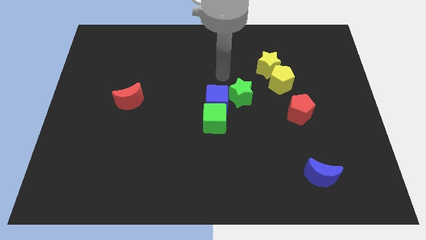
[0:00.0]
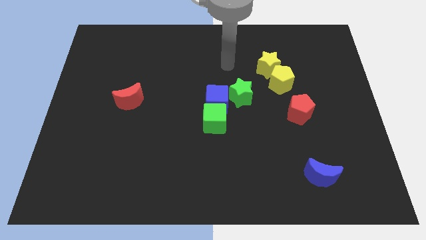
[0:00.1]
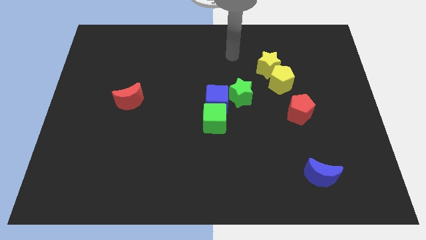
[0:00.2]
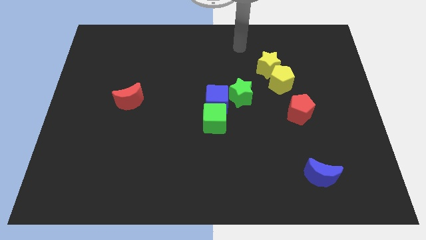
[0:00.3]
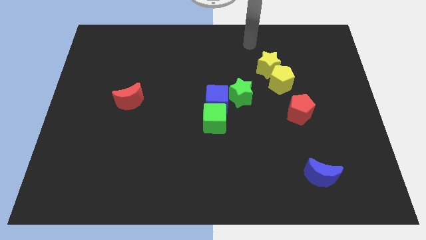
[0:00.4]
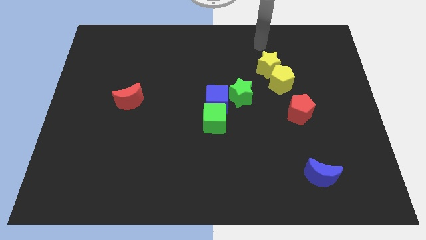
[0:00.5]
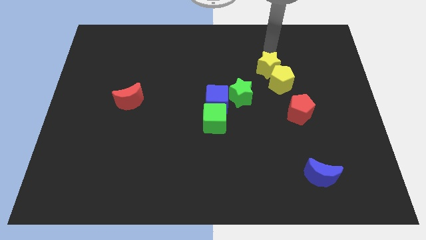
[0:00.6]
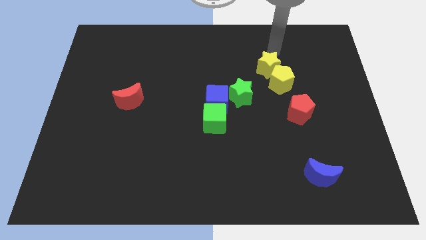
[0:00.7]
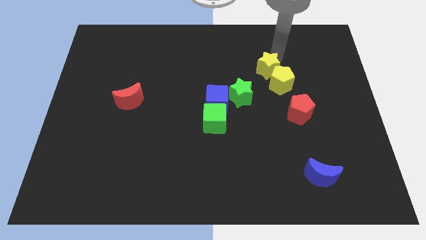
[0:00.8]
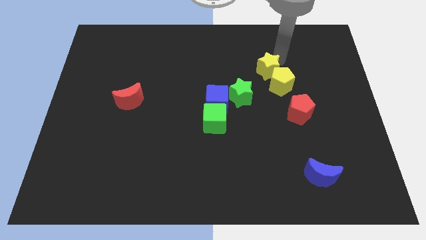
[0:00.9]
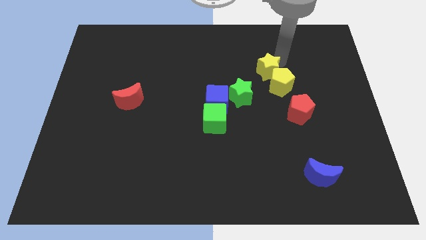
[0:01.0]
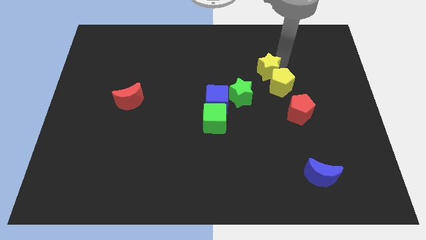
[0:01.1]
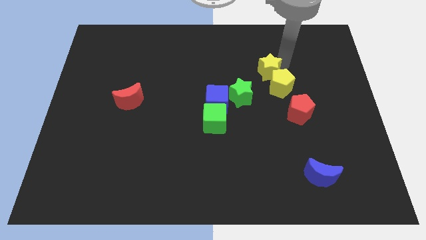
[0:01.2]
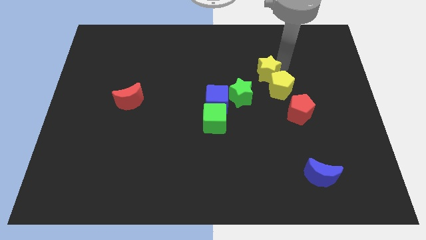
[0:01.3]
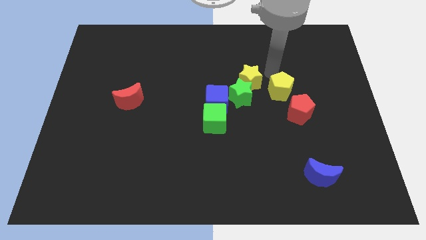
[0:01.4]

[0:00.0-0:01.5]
separate the yellow star and yellow pentagon

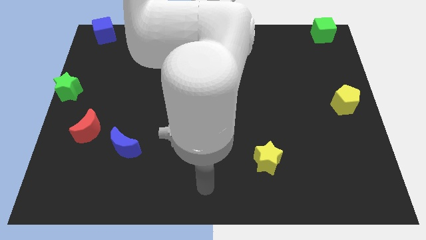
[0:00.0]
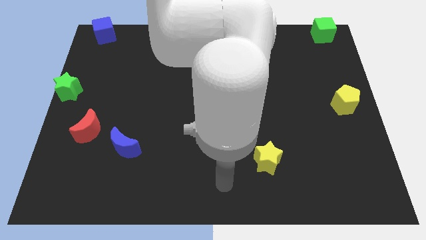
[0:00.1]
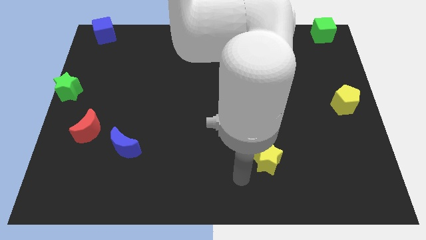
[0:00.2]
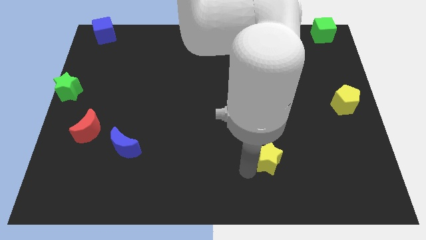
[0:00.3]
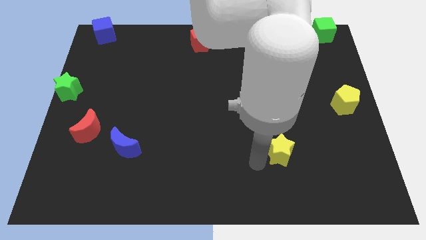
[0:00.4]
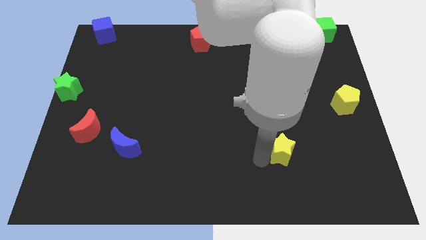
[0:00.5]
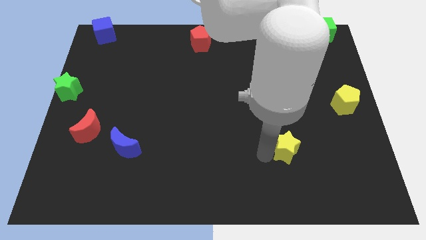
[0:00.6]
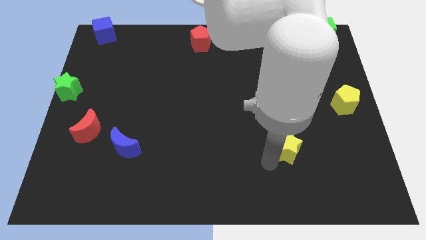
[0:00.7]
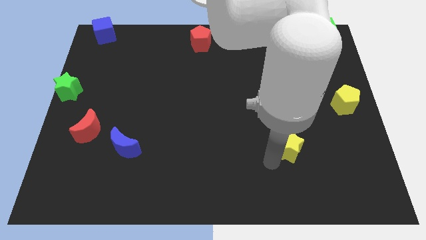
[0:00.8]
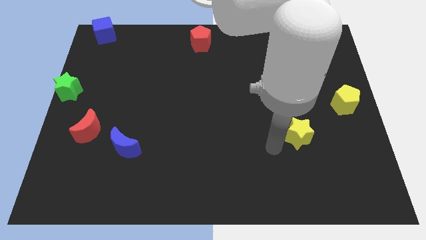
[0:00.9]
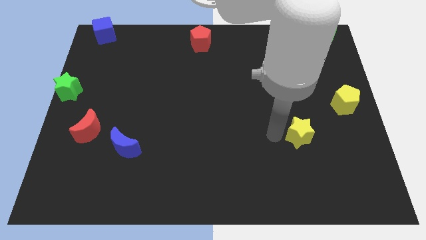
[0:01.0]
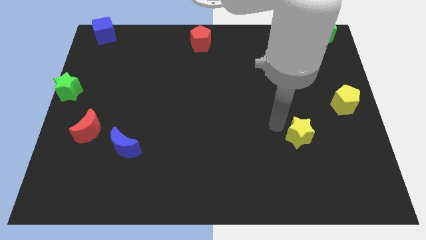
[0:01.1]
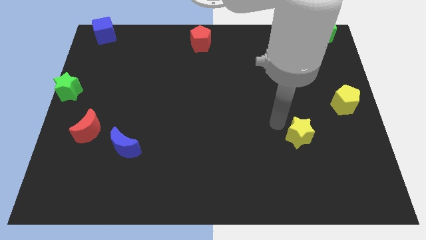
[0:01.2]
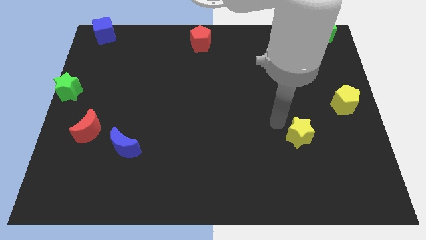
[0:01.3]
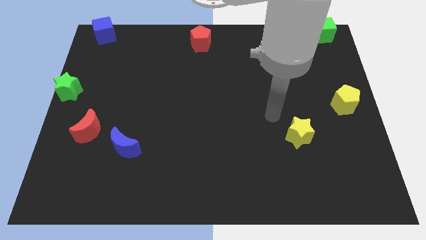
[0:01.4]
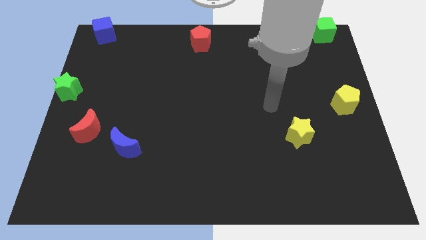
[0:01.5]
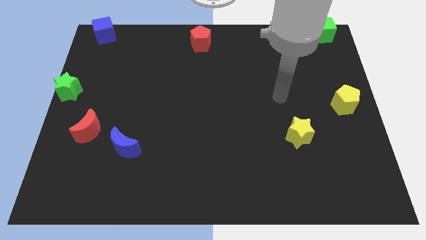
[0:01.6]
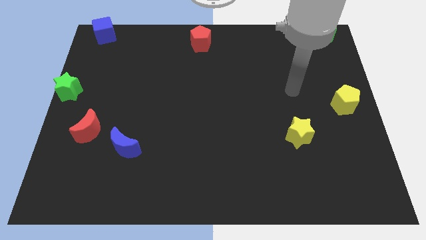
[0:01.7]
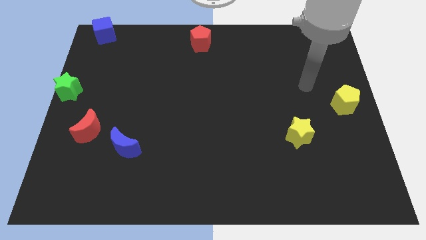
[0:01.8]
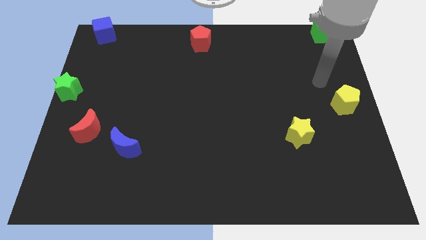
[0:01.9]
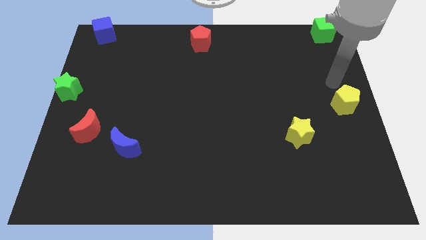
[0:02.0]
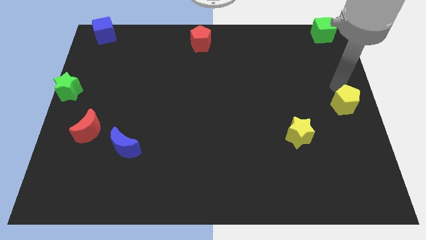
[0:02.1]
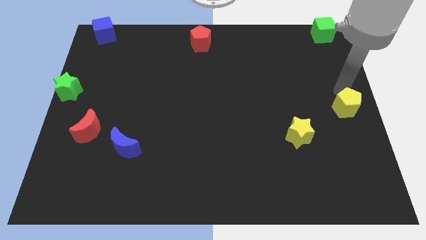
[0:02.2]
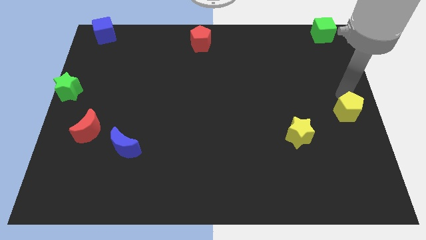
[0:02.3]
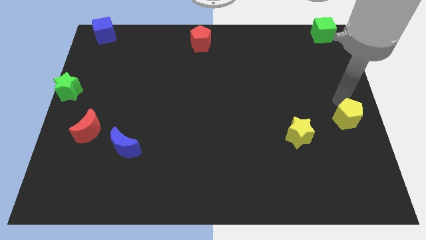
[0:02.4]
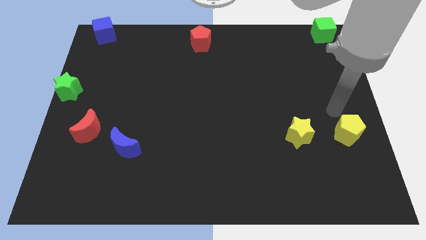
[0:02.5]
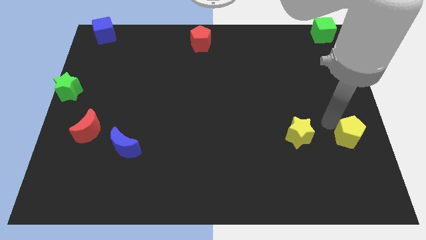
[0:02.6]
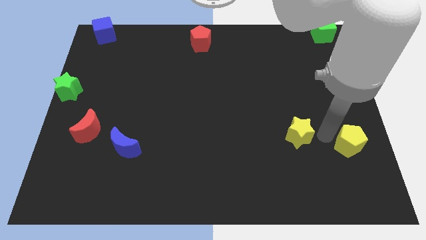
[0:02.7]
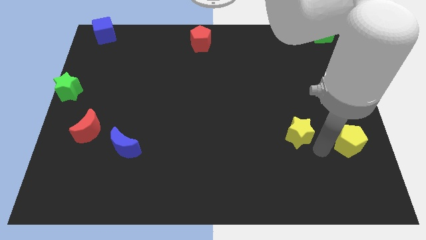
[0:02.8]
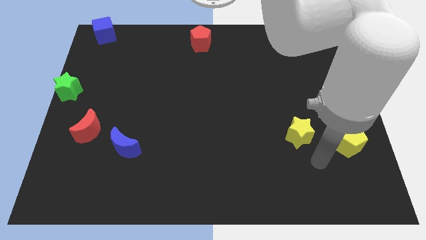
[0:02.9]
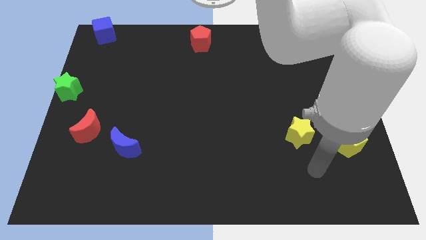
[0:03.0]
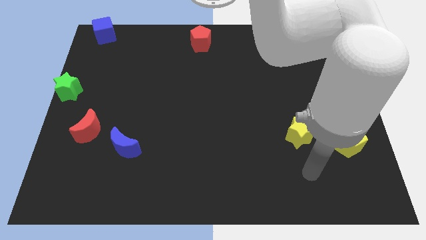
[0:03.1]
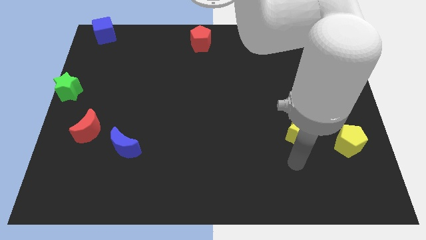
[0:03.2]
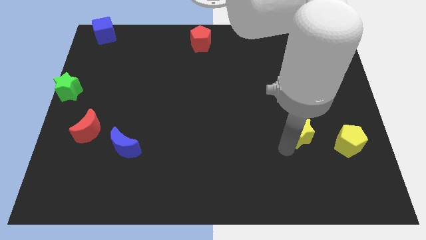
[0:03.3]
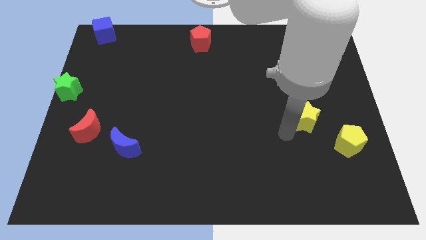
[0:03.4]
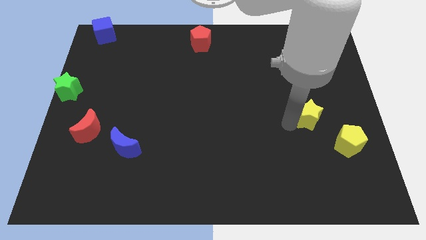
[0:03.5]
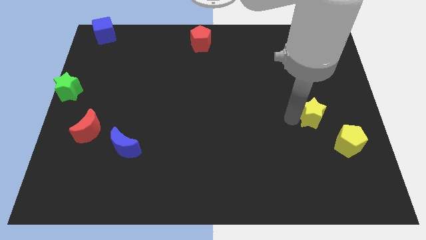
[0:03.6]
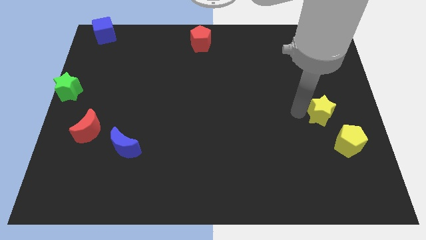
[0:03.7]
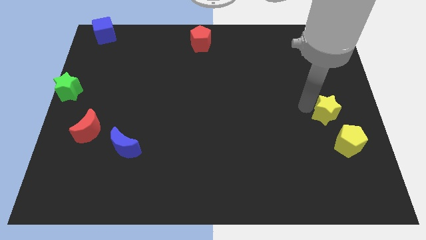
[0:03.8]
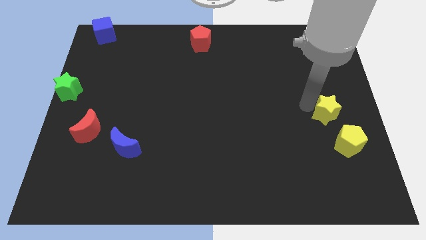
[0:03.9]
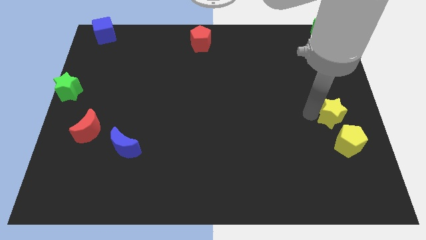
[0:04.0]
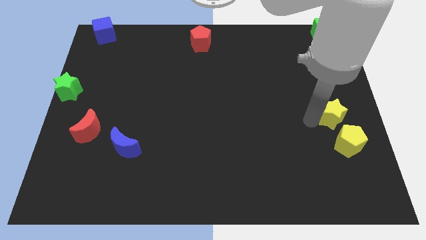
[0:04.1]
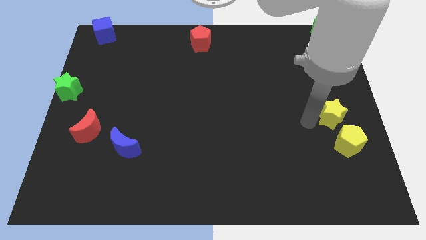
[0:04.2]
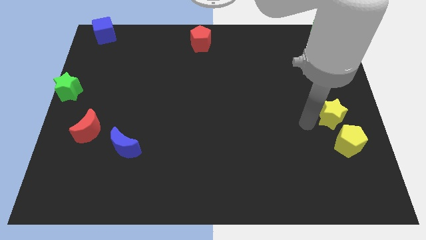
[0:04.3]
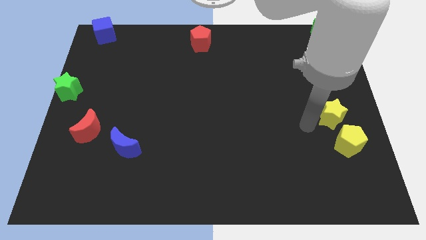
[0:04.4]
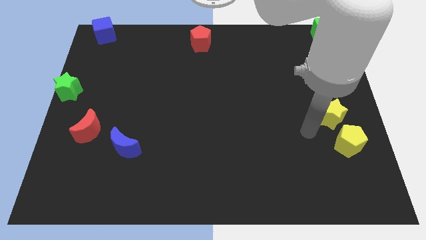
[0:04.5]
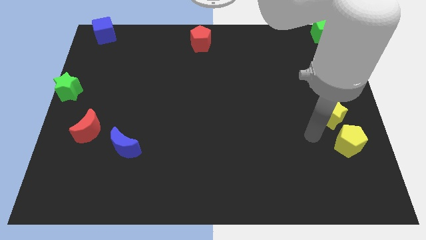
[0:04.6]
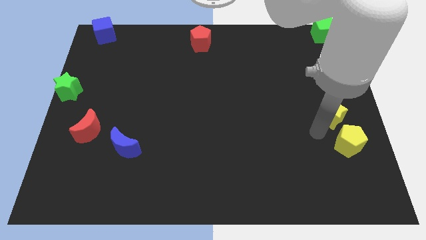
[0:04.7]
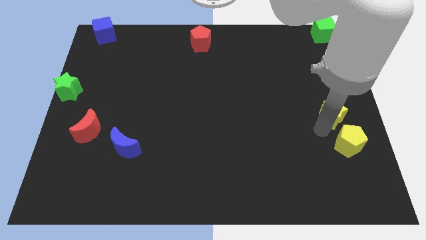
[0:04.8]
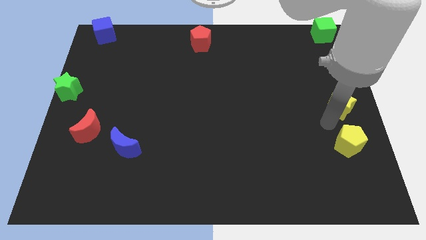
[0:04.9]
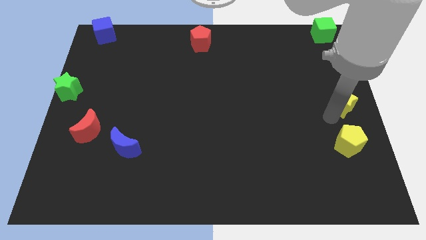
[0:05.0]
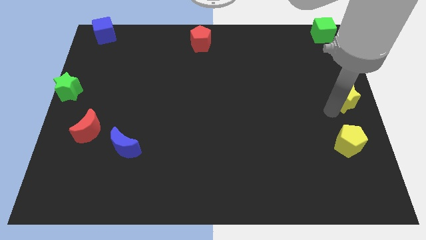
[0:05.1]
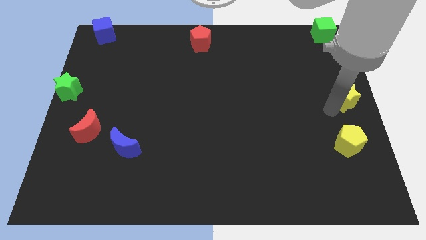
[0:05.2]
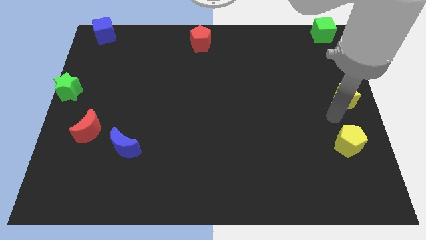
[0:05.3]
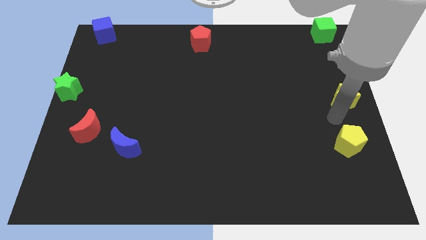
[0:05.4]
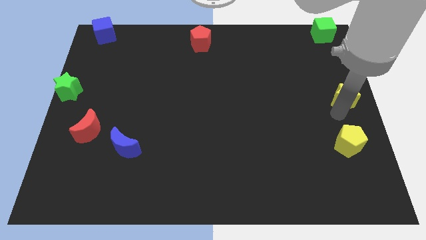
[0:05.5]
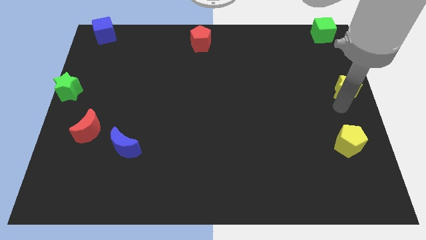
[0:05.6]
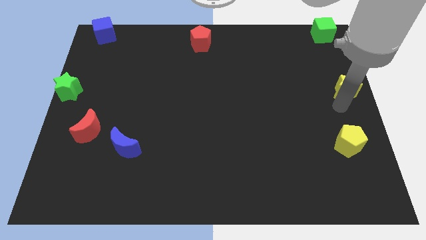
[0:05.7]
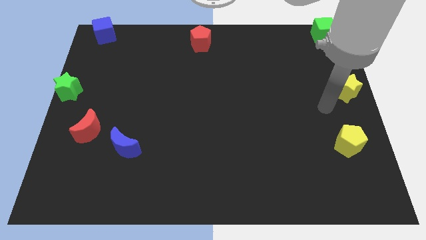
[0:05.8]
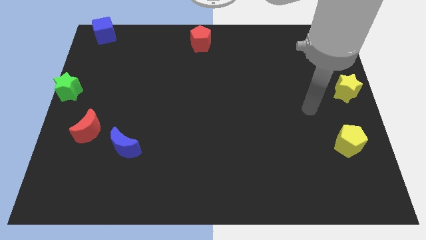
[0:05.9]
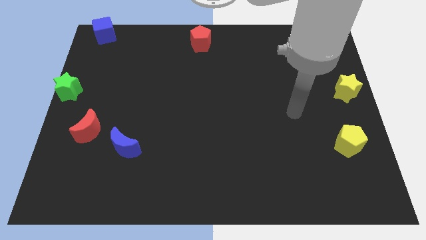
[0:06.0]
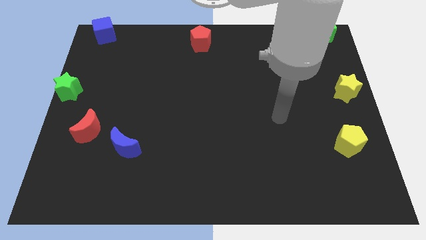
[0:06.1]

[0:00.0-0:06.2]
place a yellow star to the center right of the board

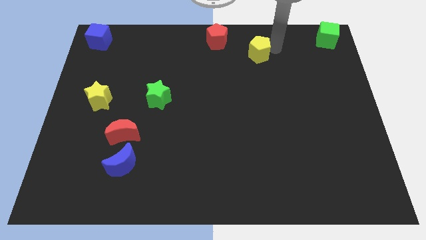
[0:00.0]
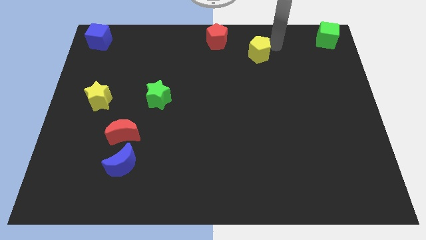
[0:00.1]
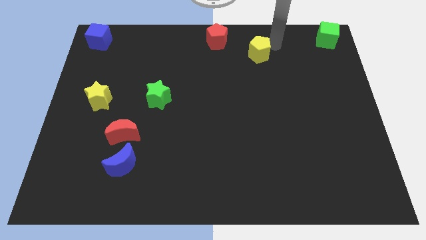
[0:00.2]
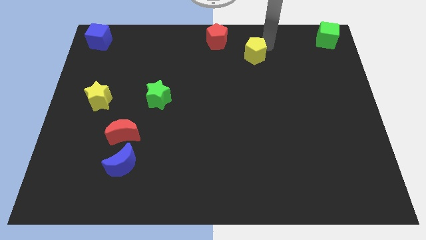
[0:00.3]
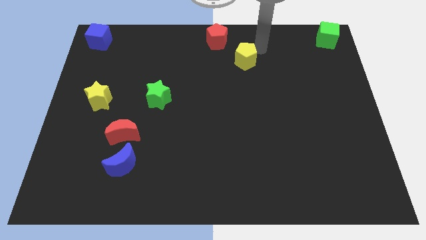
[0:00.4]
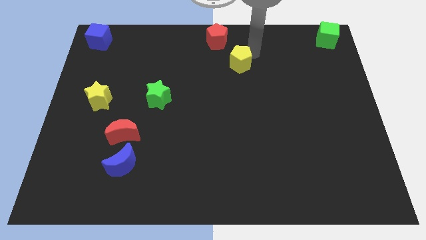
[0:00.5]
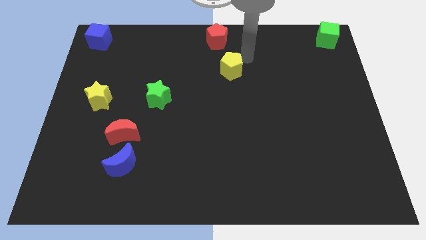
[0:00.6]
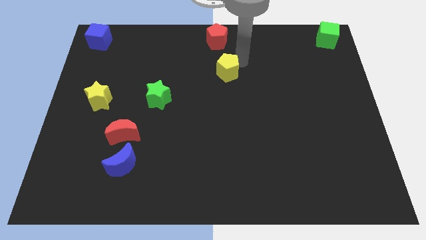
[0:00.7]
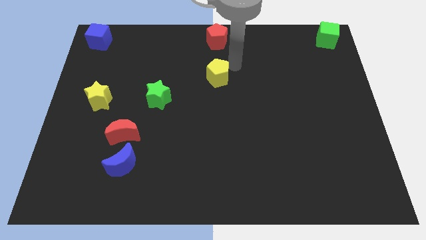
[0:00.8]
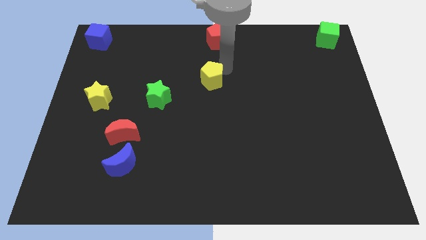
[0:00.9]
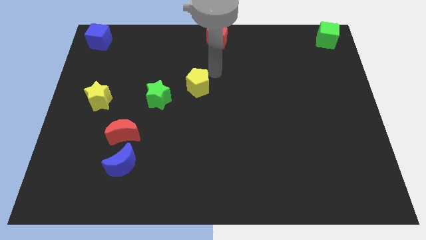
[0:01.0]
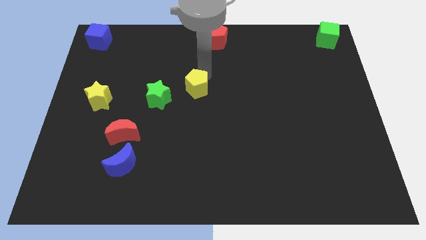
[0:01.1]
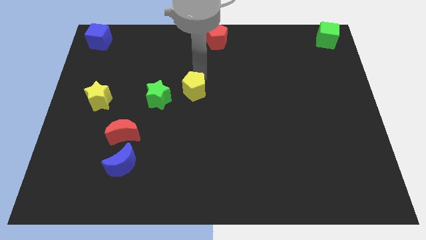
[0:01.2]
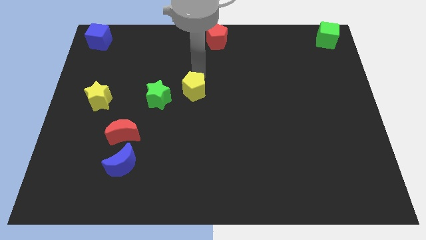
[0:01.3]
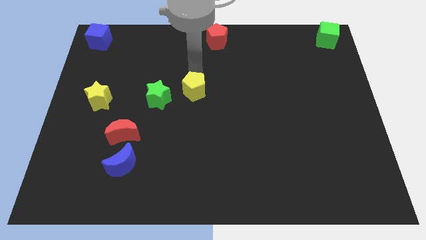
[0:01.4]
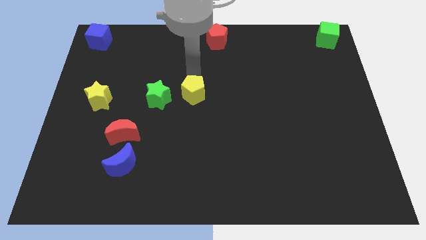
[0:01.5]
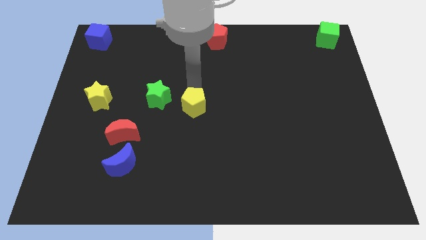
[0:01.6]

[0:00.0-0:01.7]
place yellow pentagon to the right of green star
